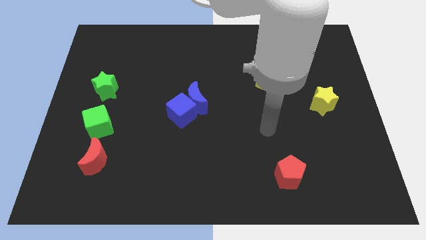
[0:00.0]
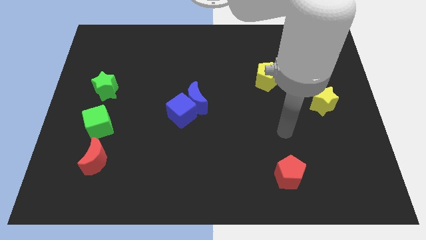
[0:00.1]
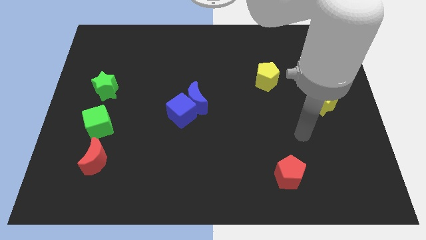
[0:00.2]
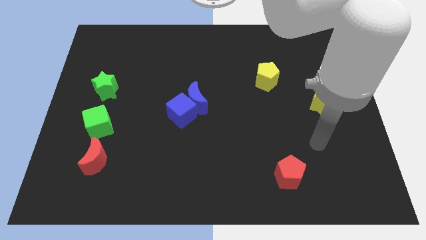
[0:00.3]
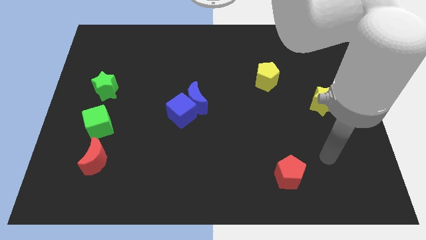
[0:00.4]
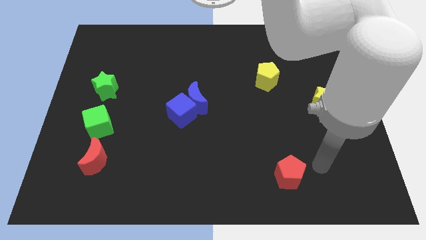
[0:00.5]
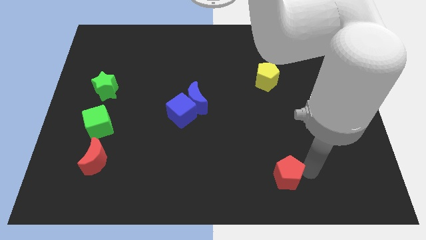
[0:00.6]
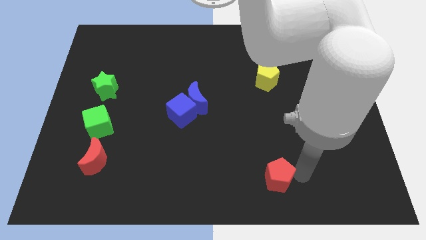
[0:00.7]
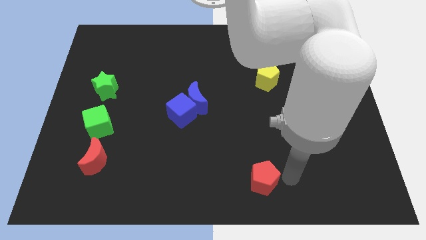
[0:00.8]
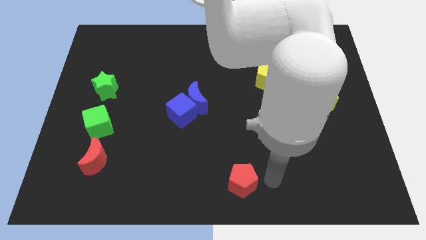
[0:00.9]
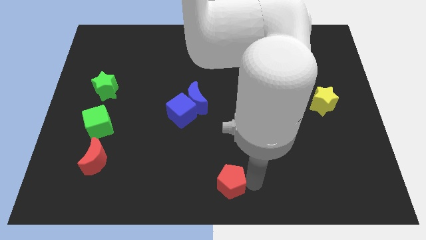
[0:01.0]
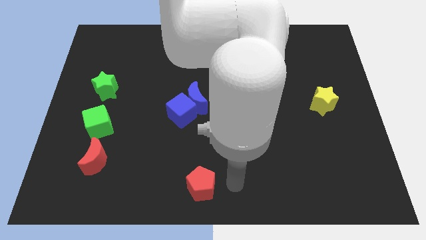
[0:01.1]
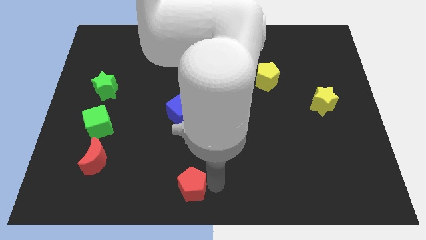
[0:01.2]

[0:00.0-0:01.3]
drag the red pentagon vertically towards the blue cube

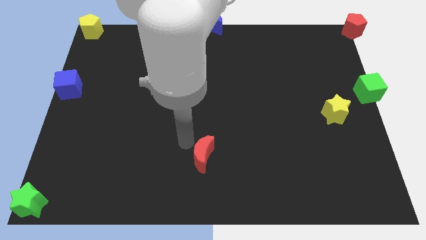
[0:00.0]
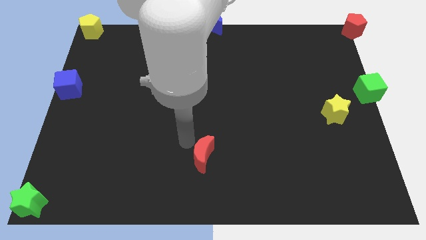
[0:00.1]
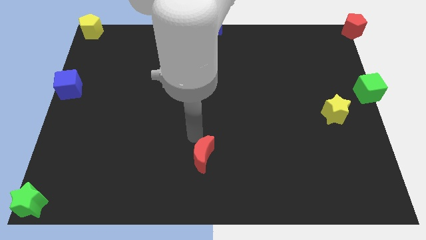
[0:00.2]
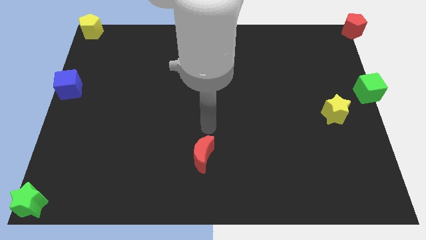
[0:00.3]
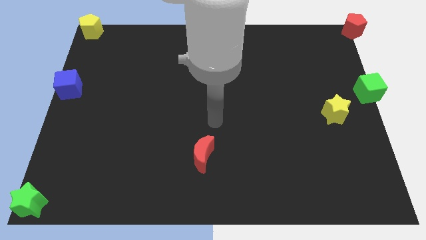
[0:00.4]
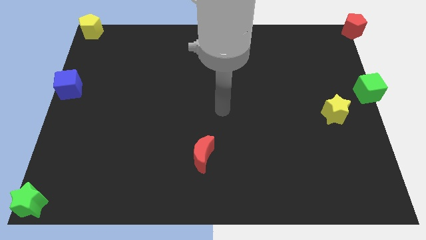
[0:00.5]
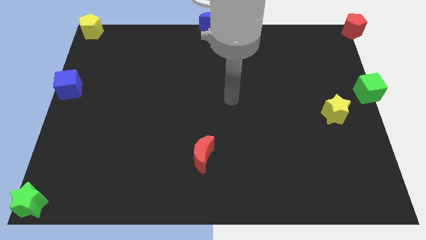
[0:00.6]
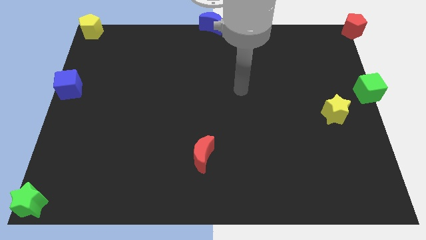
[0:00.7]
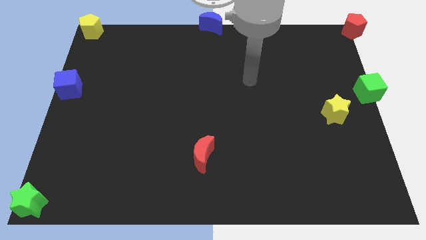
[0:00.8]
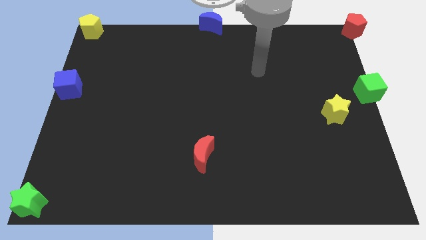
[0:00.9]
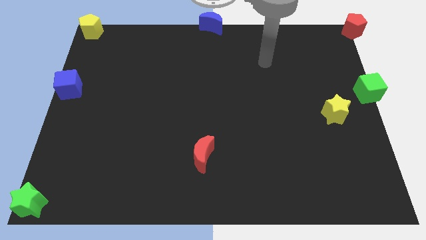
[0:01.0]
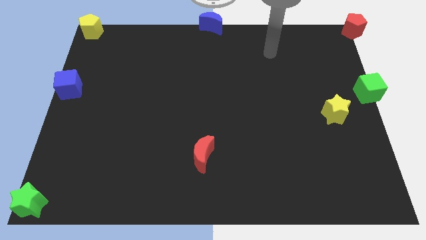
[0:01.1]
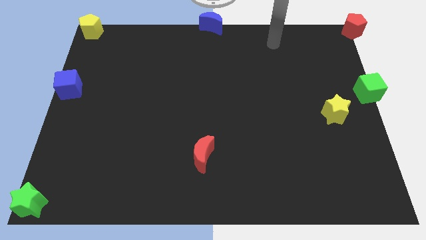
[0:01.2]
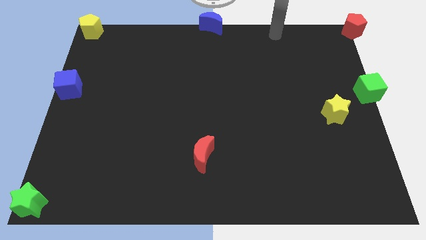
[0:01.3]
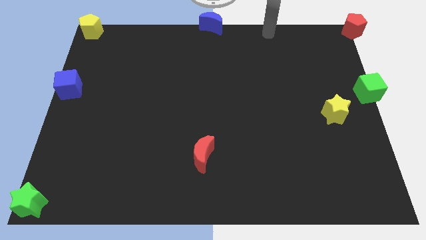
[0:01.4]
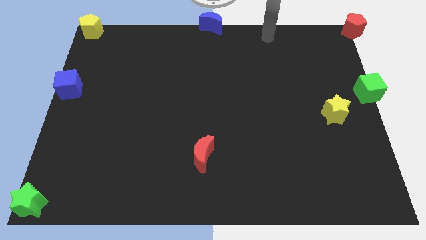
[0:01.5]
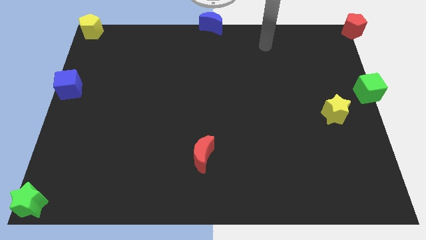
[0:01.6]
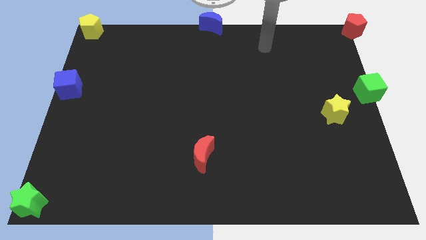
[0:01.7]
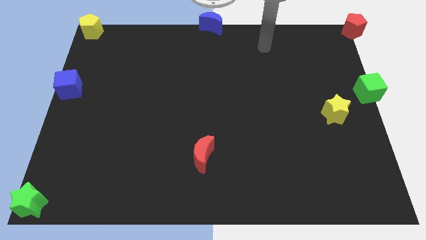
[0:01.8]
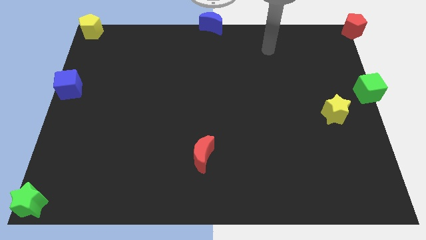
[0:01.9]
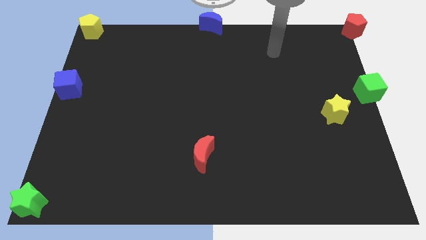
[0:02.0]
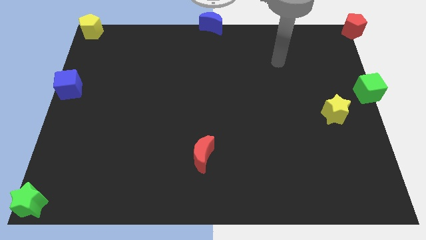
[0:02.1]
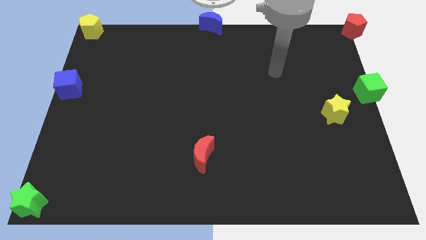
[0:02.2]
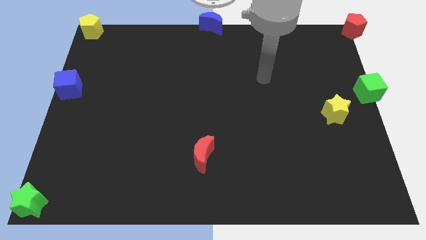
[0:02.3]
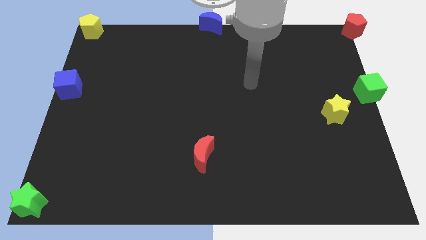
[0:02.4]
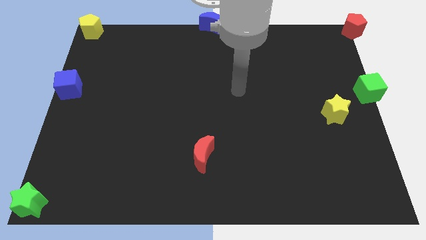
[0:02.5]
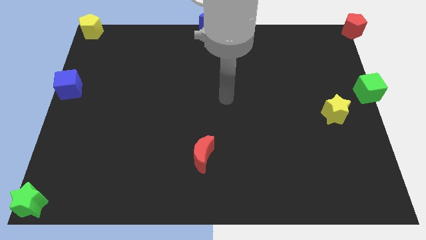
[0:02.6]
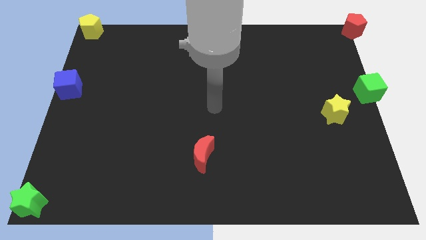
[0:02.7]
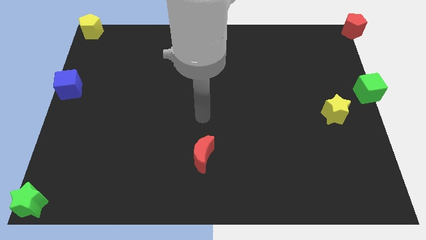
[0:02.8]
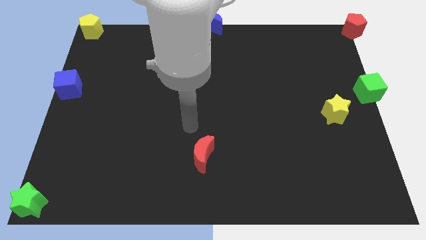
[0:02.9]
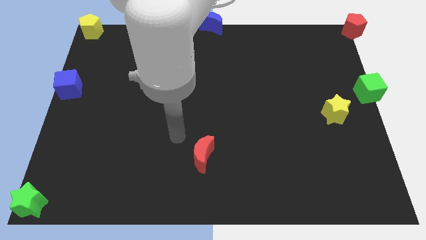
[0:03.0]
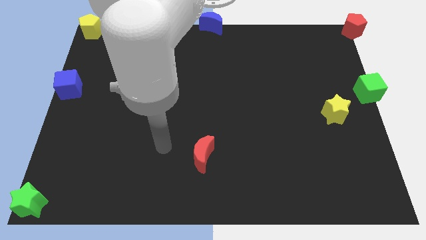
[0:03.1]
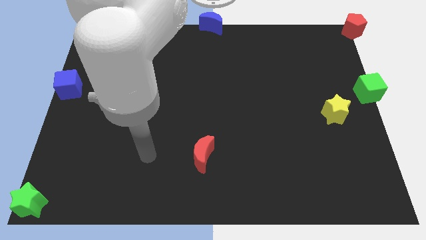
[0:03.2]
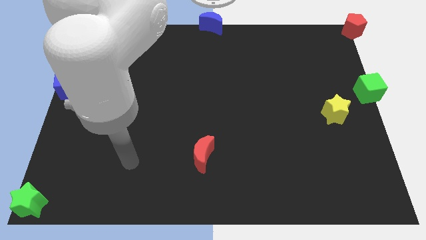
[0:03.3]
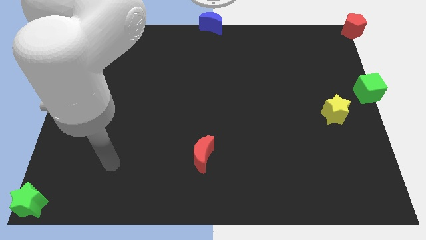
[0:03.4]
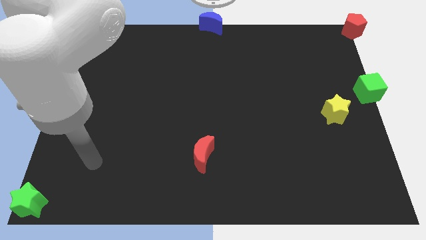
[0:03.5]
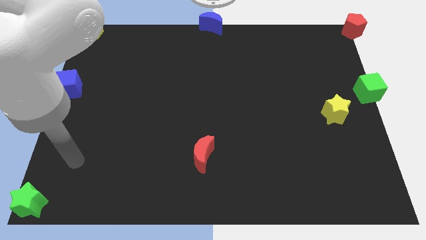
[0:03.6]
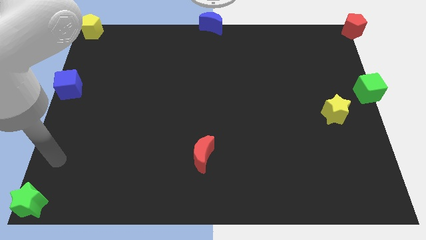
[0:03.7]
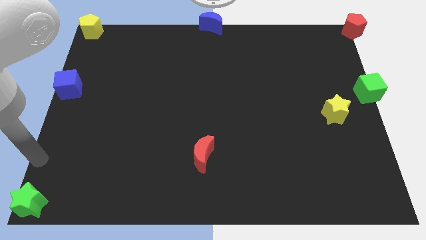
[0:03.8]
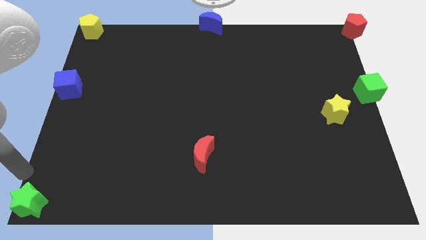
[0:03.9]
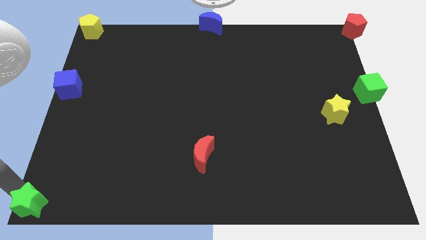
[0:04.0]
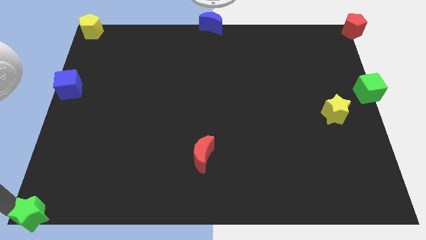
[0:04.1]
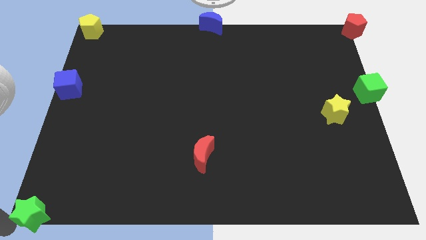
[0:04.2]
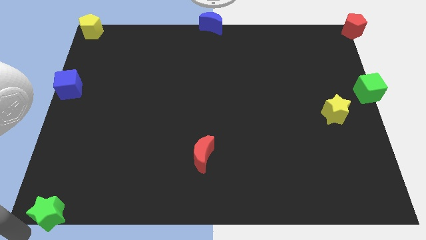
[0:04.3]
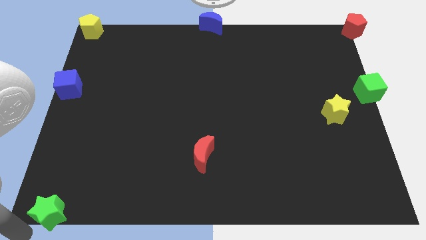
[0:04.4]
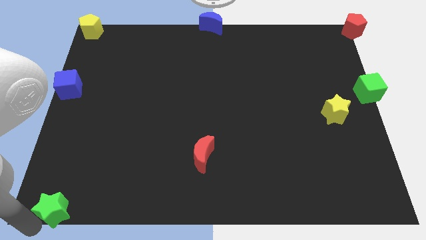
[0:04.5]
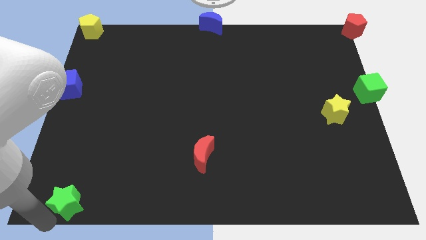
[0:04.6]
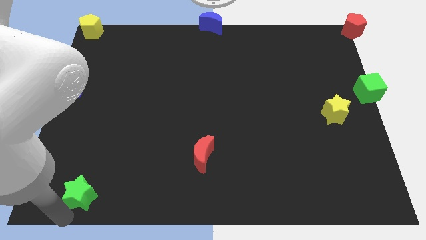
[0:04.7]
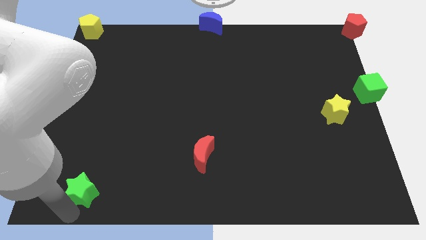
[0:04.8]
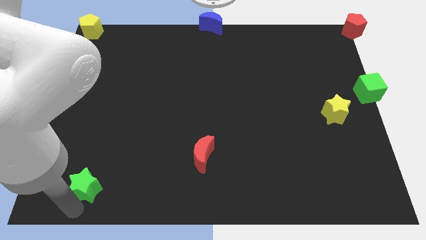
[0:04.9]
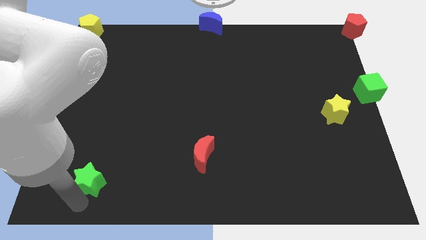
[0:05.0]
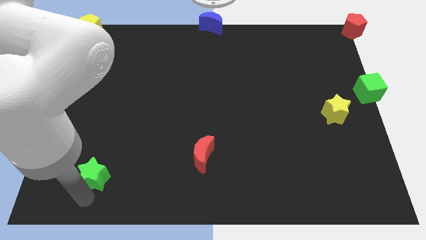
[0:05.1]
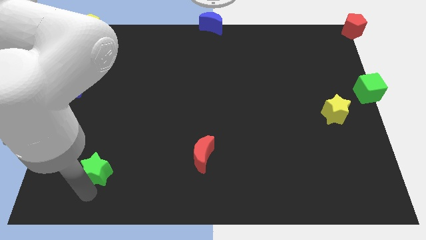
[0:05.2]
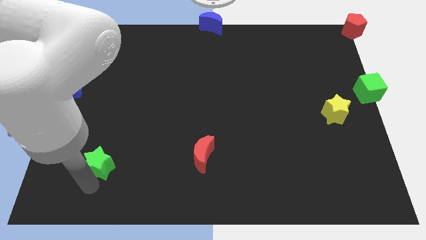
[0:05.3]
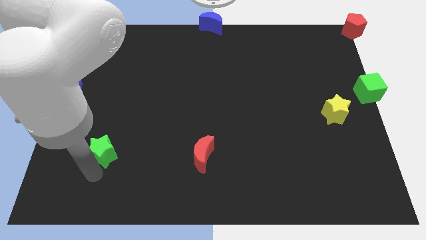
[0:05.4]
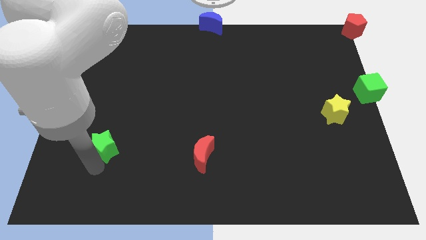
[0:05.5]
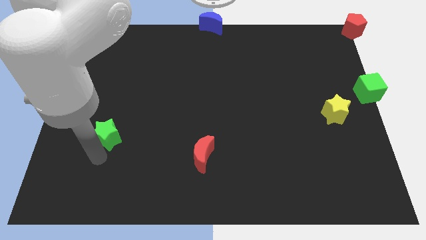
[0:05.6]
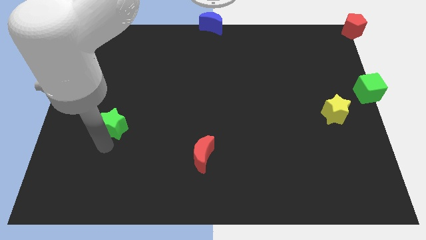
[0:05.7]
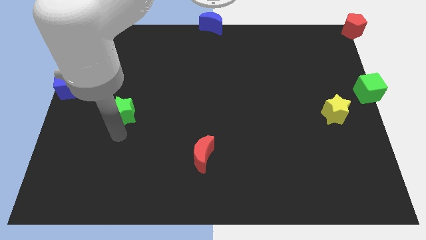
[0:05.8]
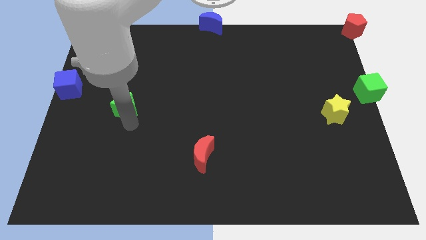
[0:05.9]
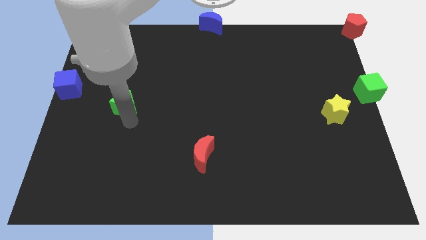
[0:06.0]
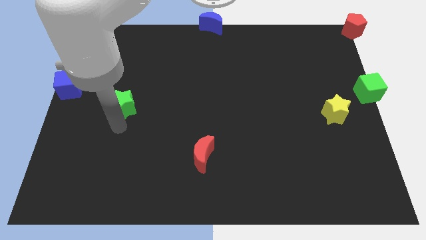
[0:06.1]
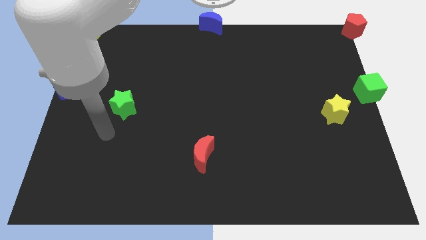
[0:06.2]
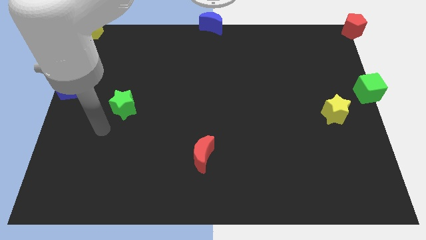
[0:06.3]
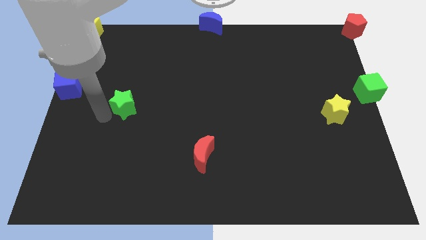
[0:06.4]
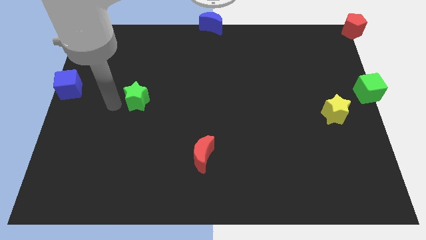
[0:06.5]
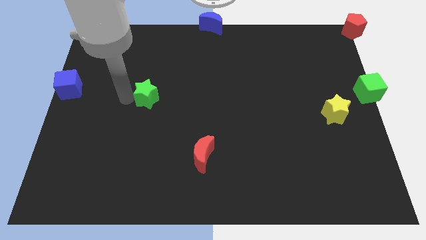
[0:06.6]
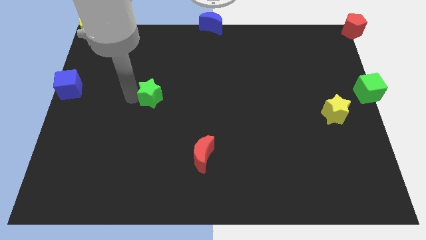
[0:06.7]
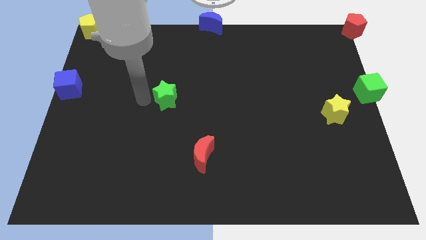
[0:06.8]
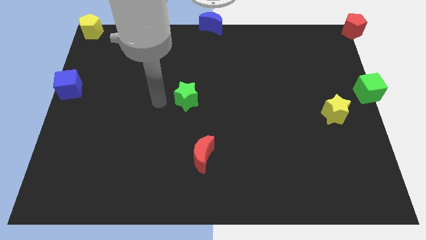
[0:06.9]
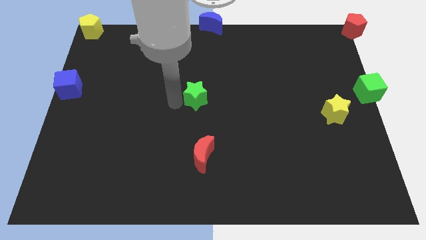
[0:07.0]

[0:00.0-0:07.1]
place the green star in between the yellow star and blue cube

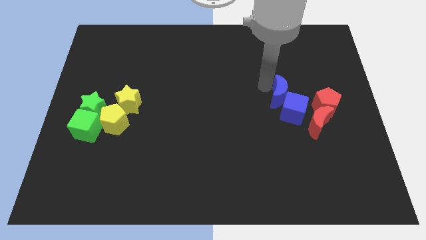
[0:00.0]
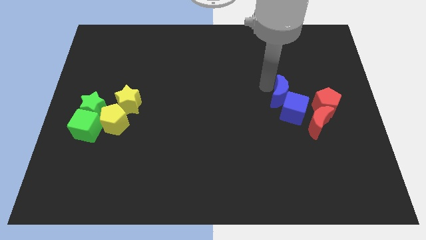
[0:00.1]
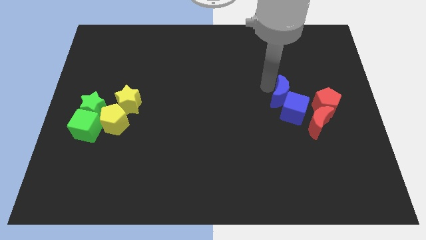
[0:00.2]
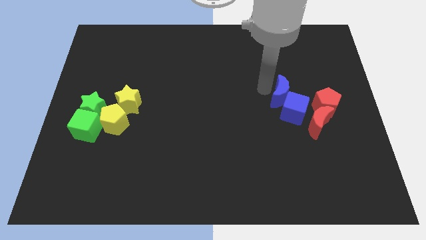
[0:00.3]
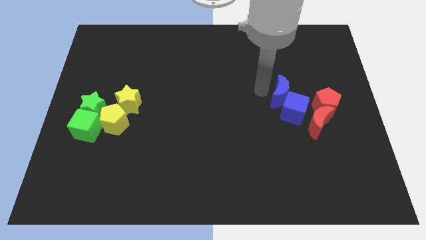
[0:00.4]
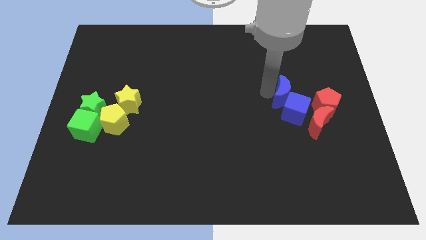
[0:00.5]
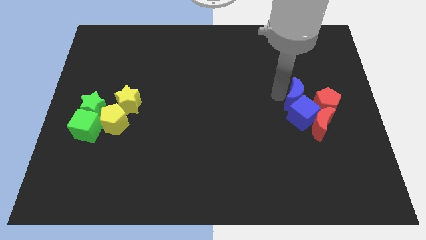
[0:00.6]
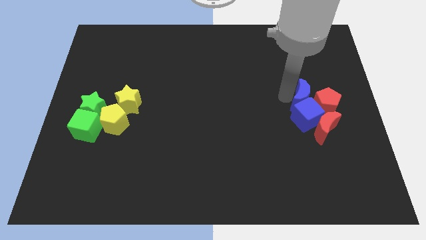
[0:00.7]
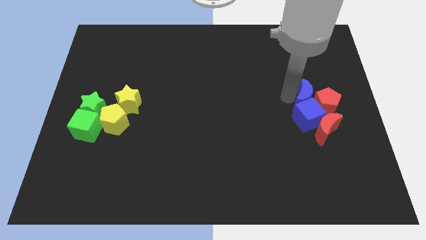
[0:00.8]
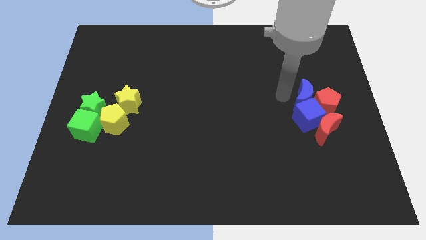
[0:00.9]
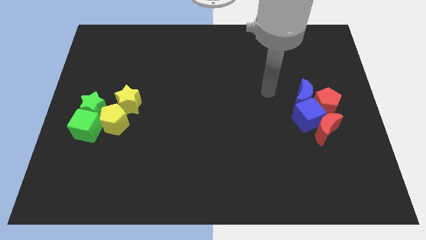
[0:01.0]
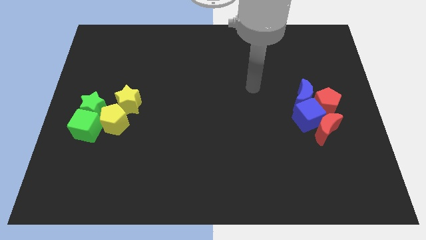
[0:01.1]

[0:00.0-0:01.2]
place blue moon on top of blue cube
